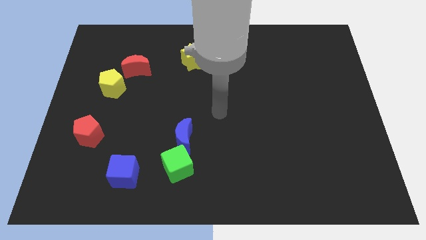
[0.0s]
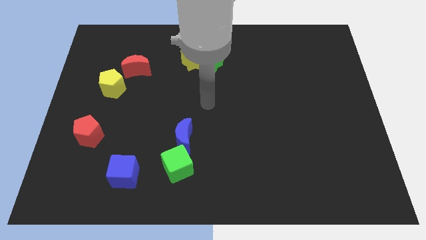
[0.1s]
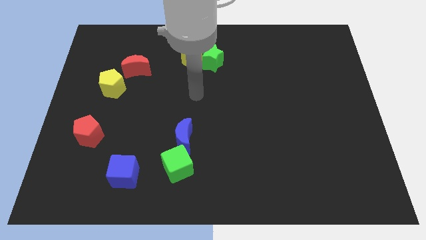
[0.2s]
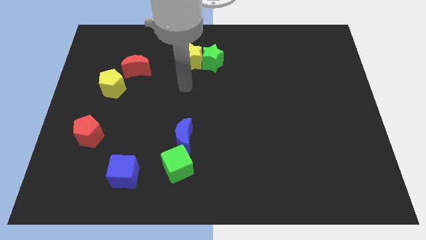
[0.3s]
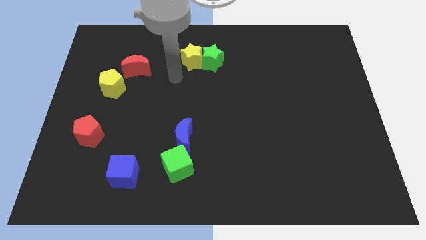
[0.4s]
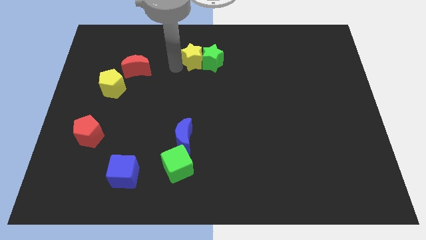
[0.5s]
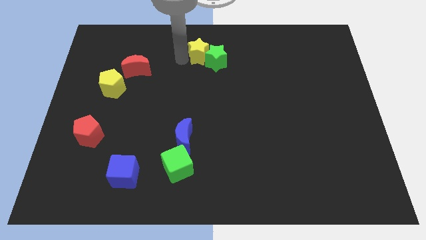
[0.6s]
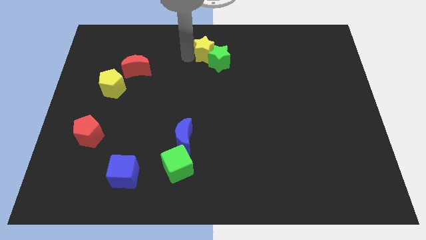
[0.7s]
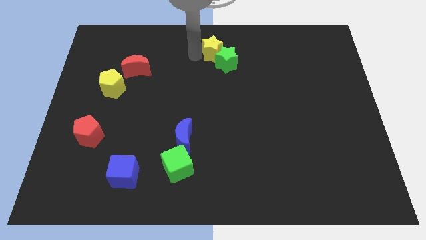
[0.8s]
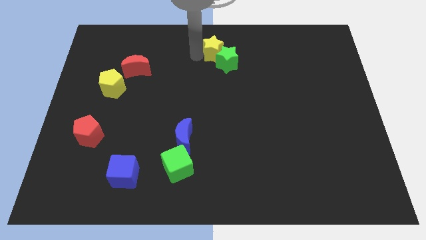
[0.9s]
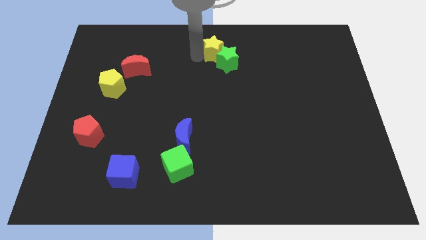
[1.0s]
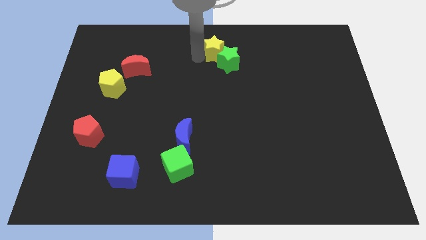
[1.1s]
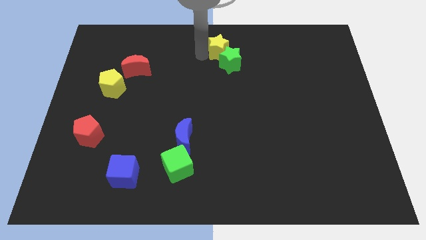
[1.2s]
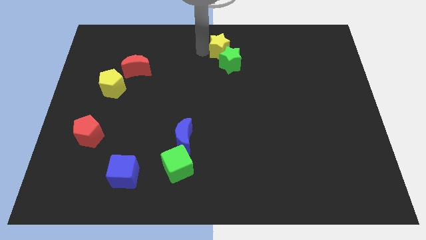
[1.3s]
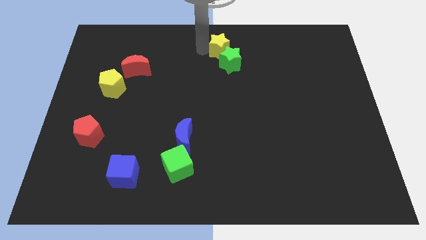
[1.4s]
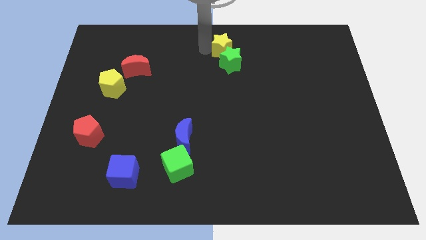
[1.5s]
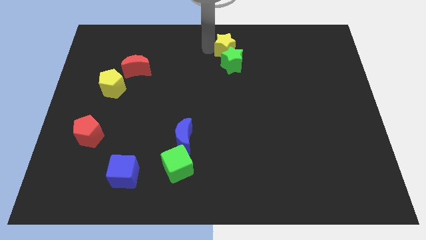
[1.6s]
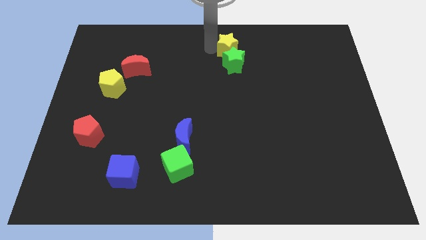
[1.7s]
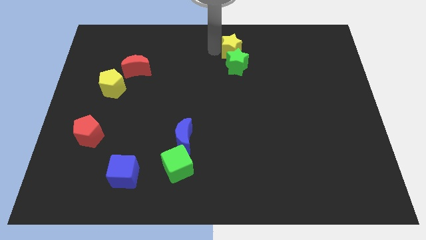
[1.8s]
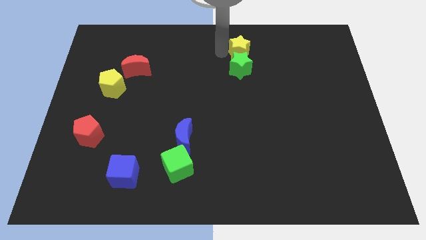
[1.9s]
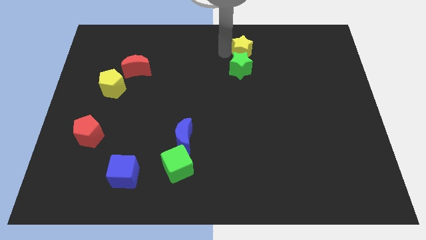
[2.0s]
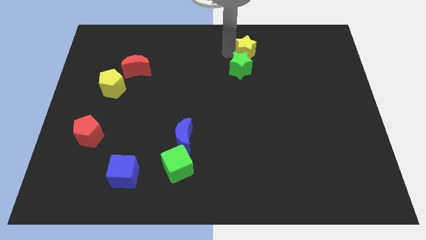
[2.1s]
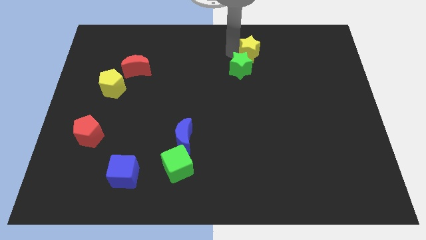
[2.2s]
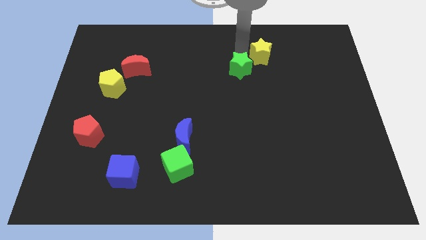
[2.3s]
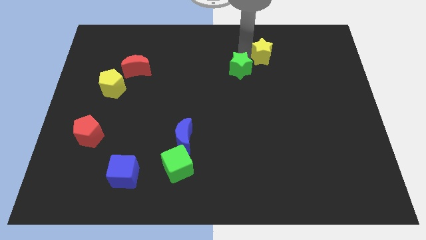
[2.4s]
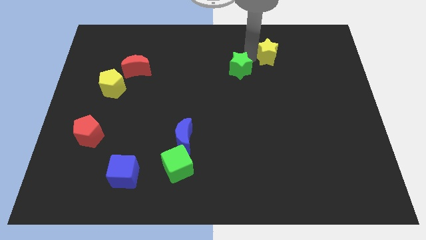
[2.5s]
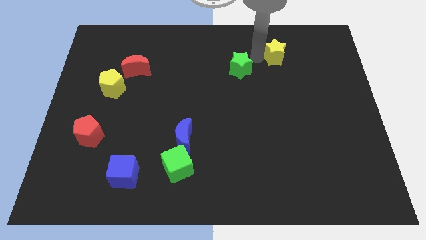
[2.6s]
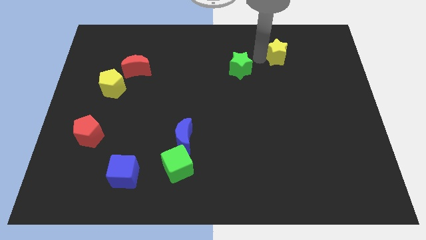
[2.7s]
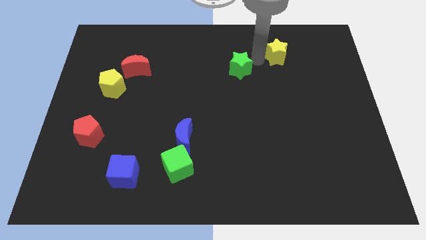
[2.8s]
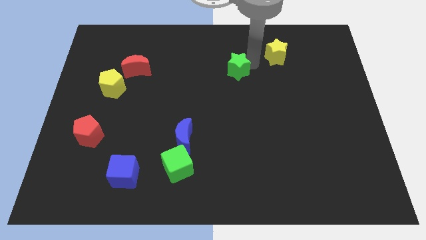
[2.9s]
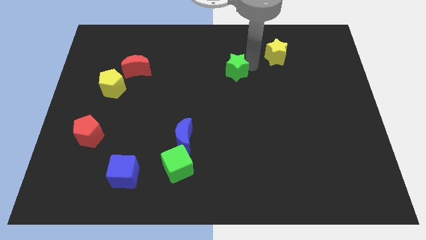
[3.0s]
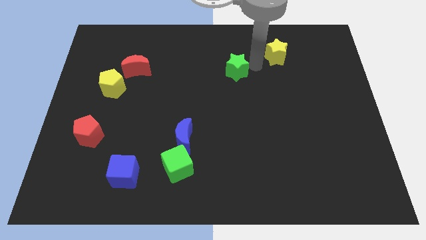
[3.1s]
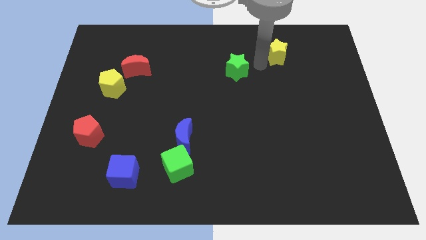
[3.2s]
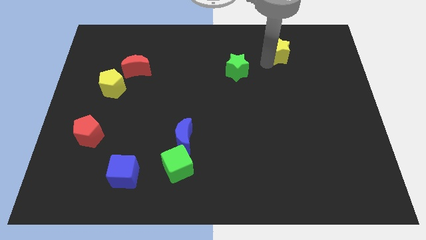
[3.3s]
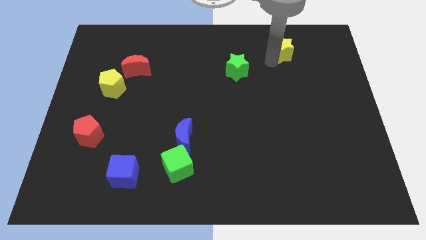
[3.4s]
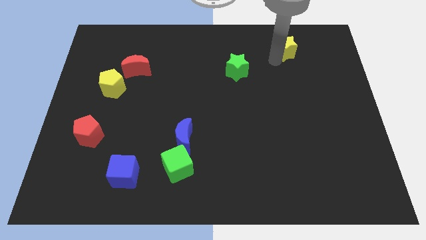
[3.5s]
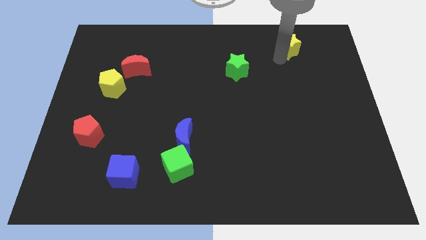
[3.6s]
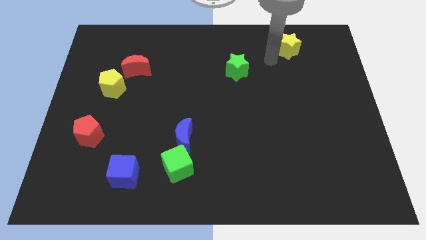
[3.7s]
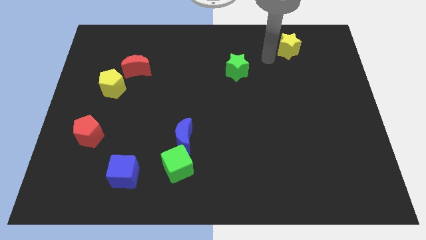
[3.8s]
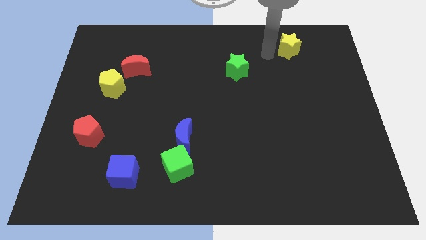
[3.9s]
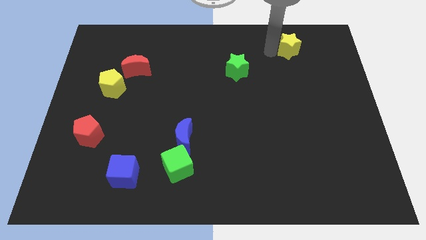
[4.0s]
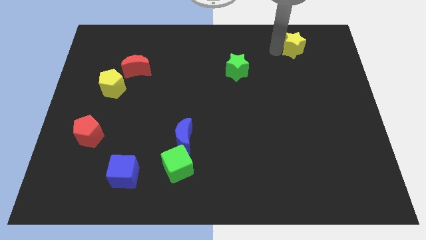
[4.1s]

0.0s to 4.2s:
separate the yellow star with the green star to the right

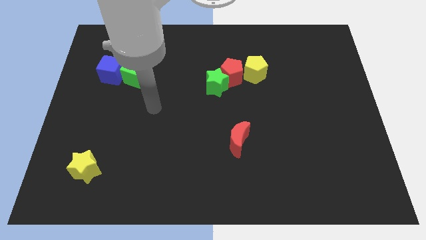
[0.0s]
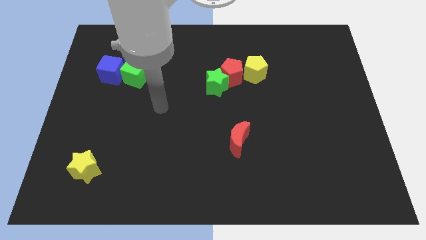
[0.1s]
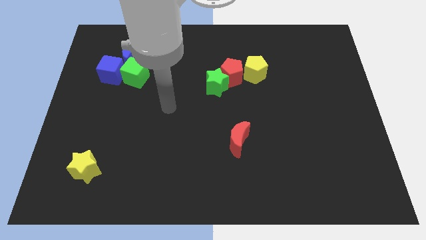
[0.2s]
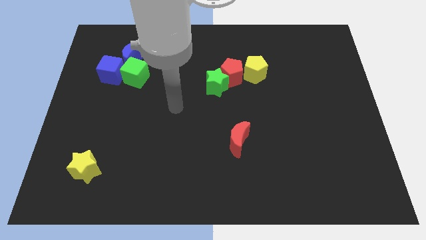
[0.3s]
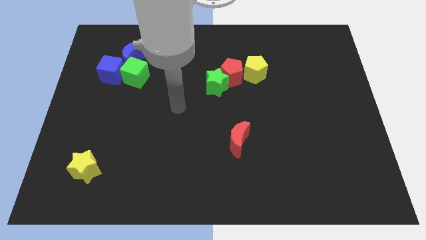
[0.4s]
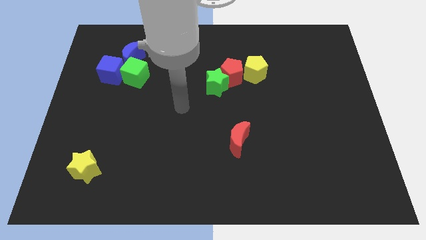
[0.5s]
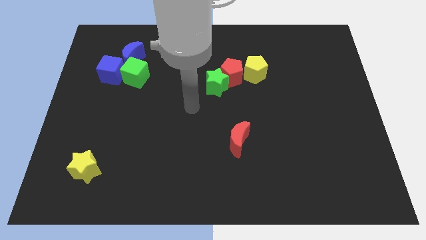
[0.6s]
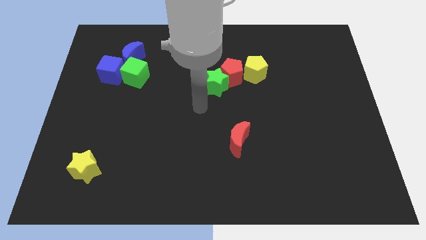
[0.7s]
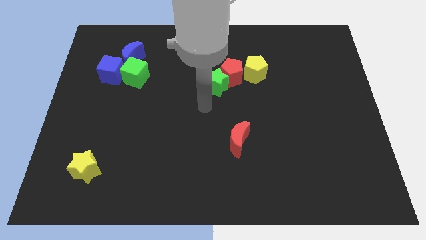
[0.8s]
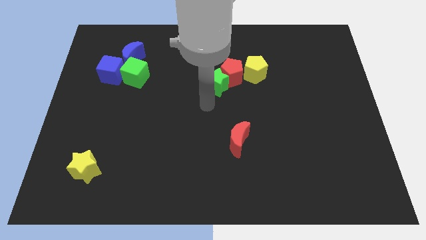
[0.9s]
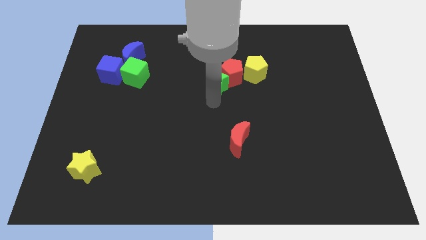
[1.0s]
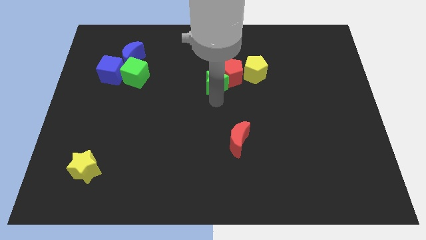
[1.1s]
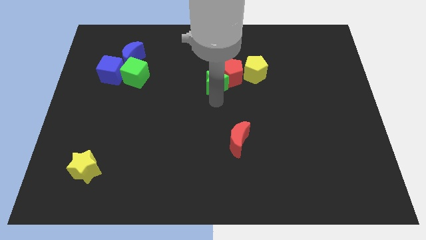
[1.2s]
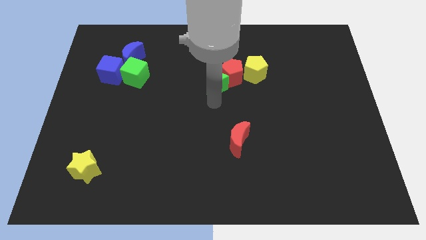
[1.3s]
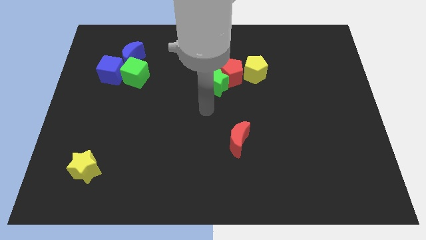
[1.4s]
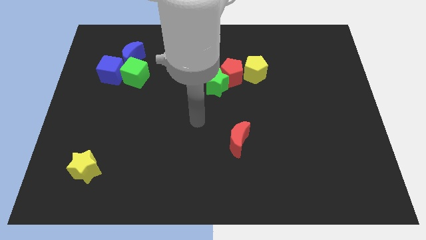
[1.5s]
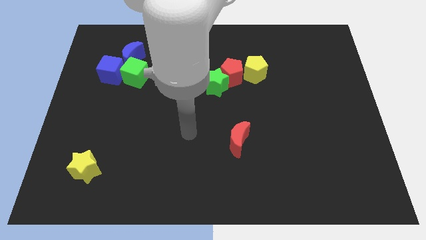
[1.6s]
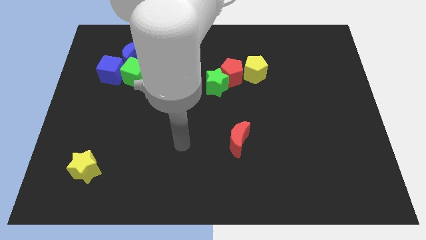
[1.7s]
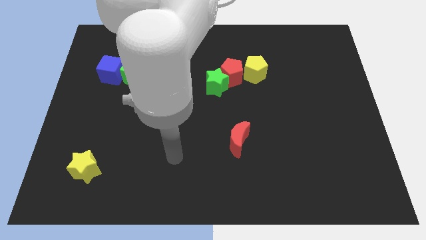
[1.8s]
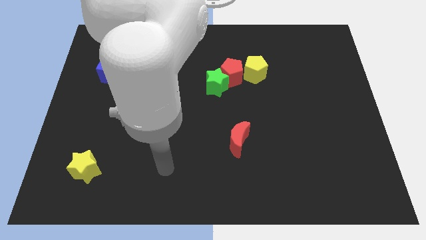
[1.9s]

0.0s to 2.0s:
place your arm in between the yellow star and red moon

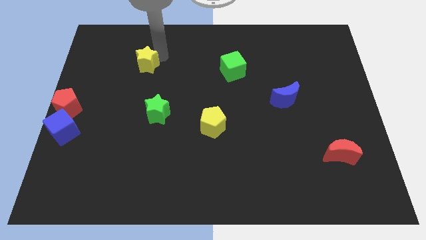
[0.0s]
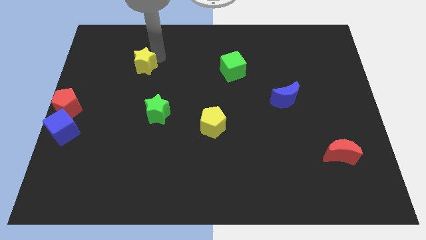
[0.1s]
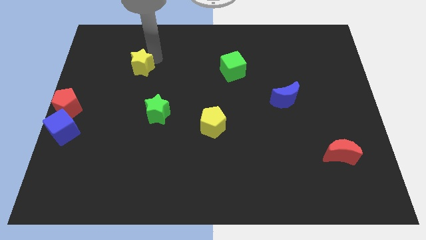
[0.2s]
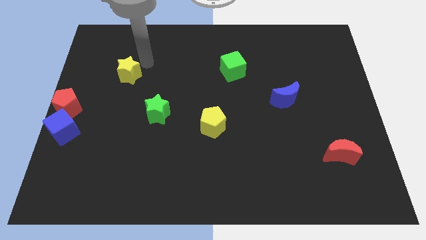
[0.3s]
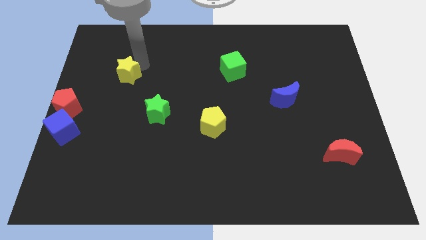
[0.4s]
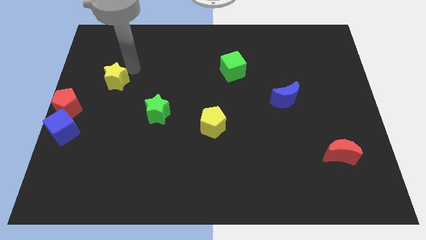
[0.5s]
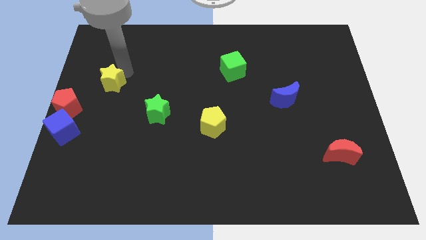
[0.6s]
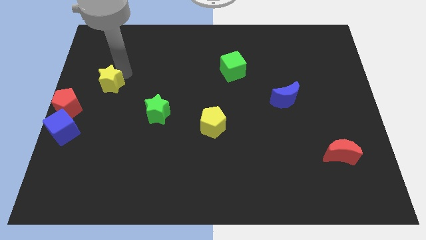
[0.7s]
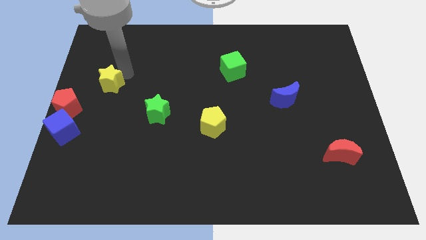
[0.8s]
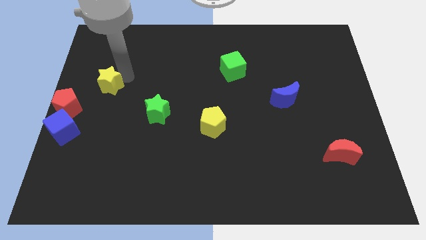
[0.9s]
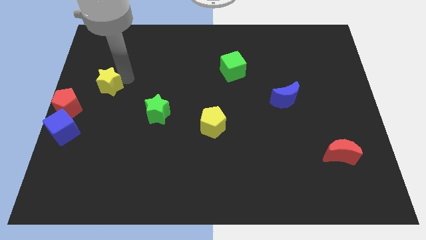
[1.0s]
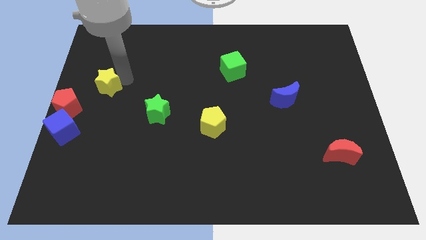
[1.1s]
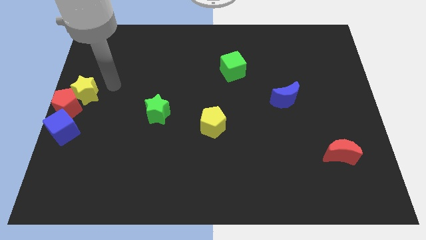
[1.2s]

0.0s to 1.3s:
push the yellow star to the left side of the board

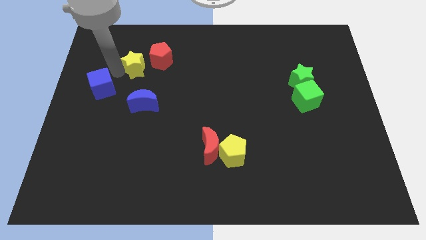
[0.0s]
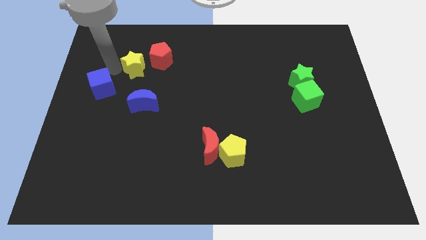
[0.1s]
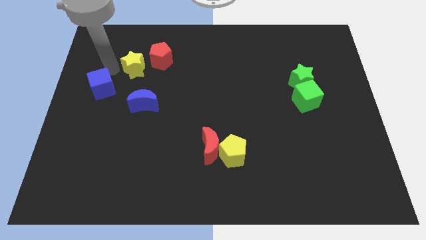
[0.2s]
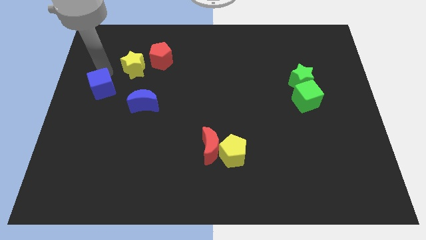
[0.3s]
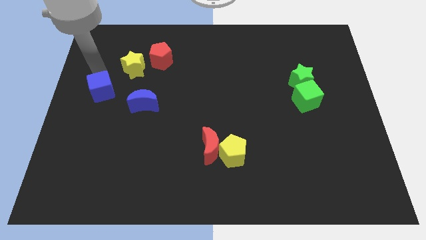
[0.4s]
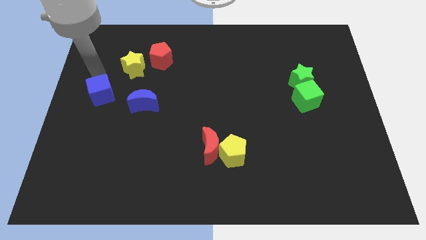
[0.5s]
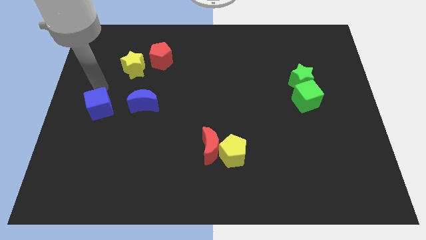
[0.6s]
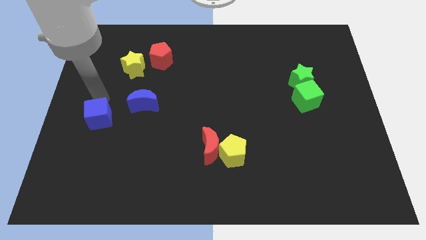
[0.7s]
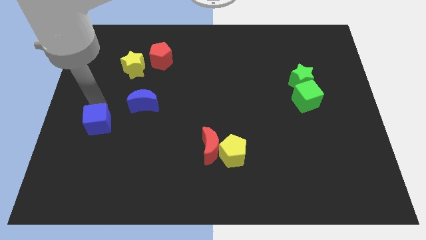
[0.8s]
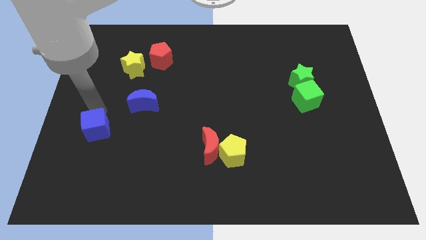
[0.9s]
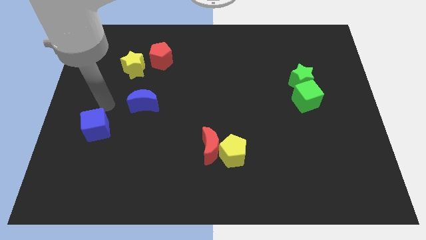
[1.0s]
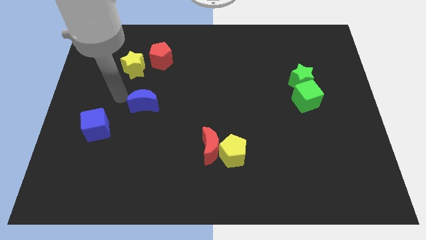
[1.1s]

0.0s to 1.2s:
push the blue cube towards the bottom

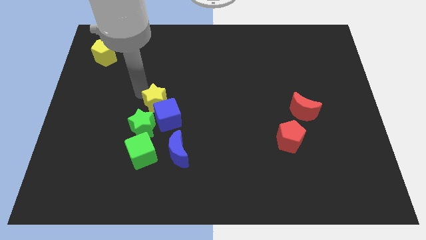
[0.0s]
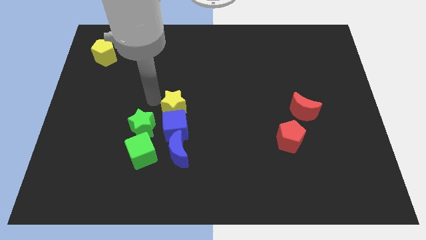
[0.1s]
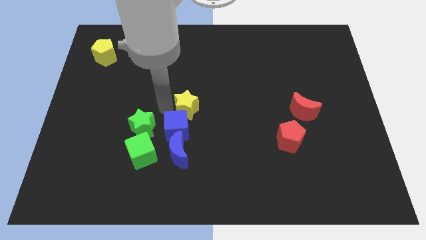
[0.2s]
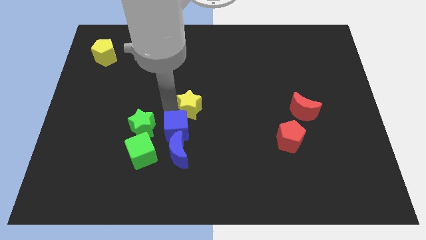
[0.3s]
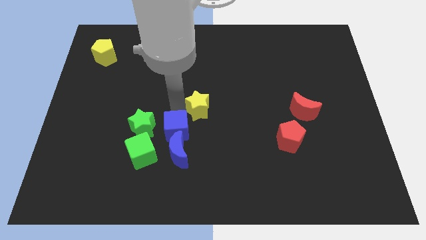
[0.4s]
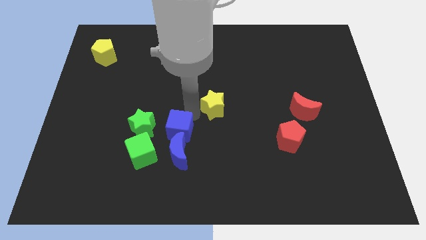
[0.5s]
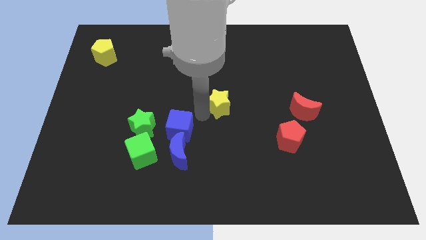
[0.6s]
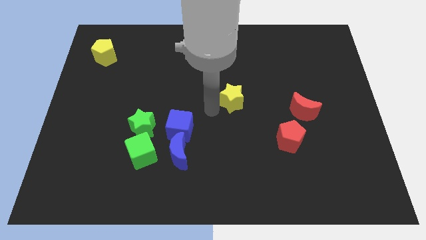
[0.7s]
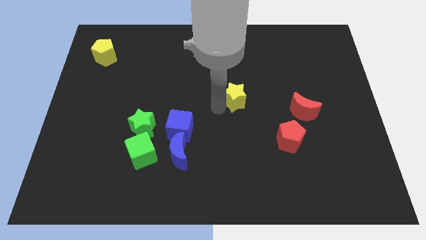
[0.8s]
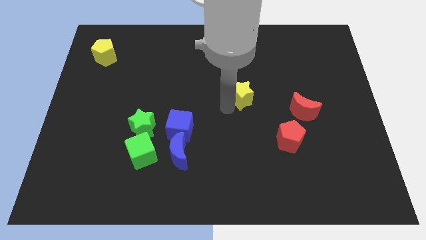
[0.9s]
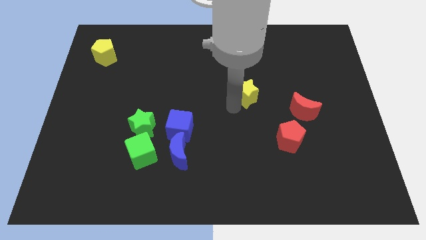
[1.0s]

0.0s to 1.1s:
push the yellow star to the right side of the board
